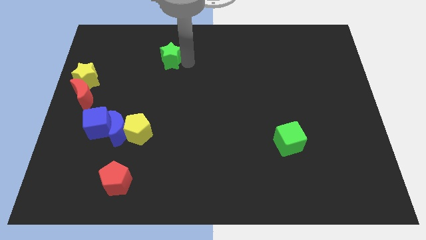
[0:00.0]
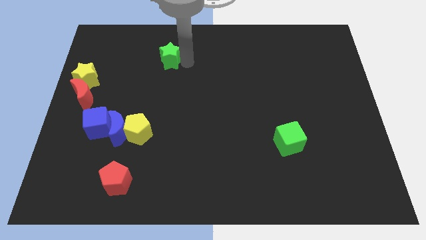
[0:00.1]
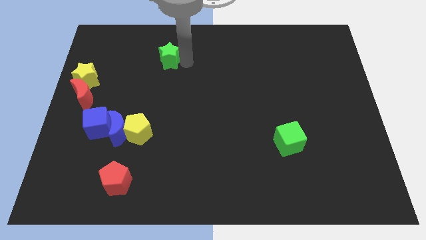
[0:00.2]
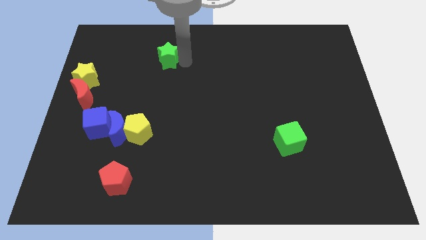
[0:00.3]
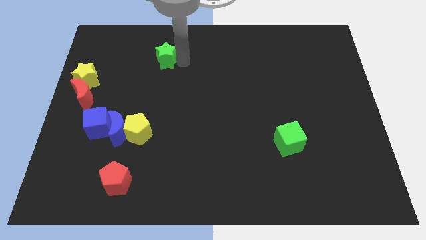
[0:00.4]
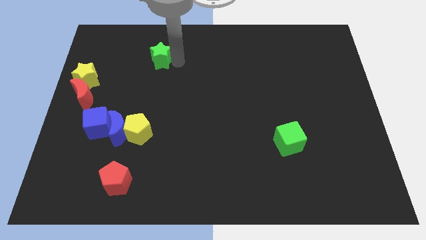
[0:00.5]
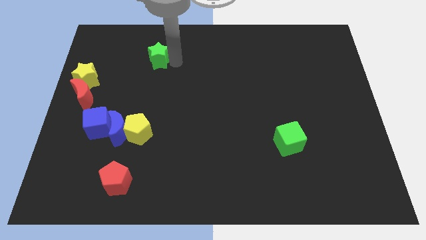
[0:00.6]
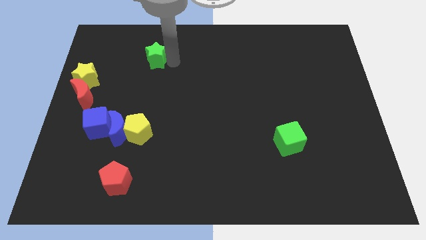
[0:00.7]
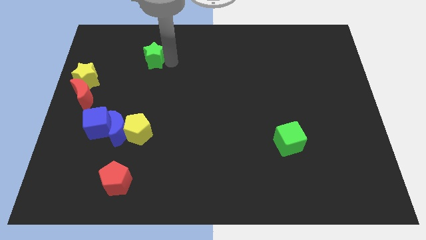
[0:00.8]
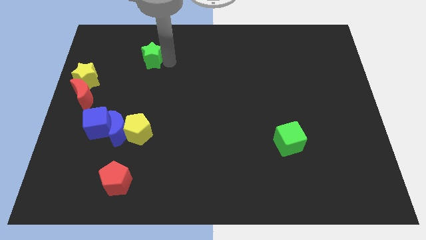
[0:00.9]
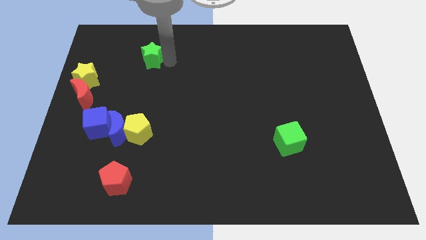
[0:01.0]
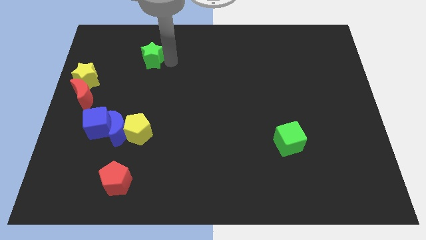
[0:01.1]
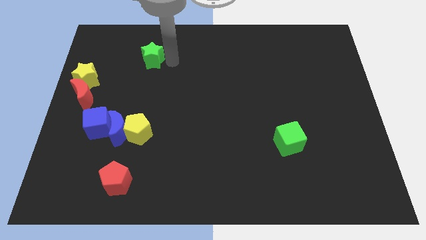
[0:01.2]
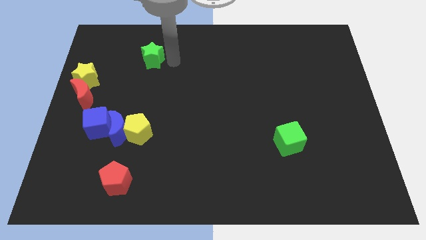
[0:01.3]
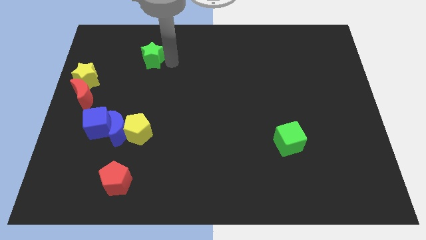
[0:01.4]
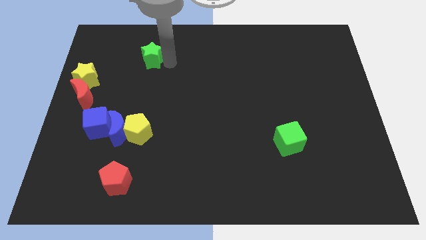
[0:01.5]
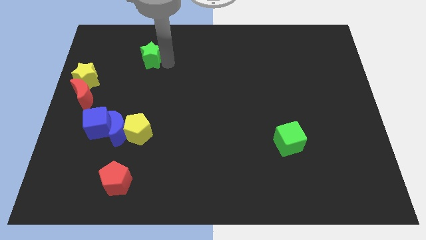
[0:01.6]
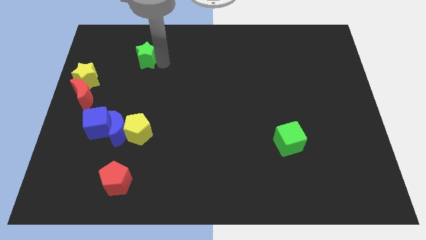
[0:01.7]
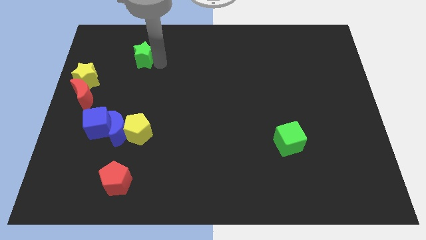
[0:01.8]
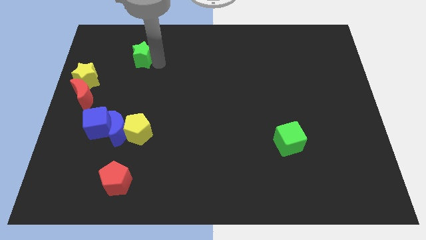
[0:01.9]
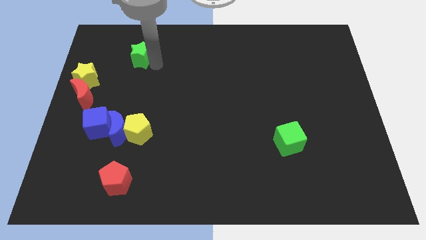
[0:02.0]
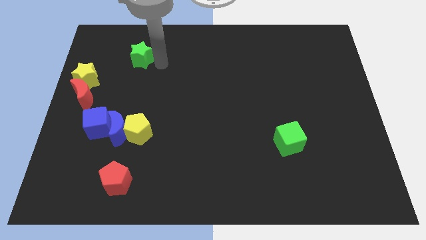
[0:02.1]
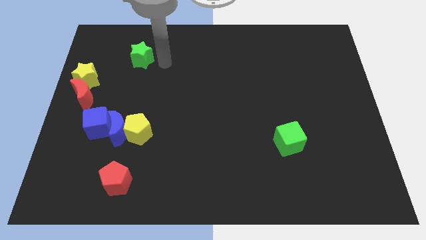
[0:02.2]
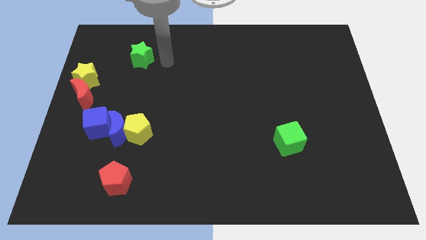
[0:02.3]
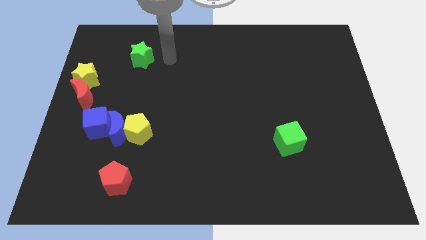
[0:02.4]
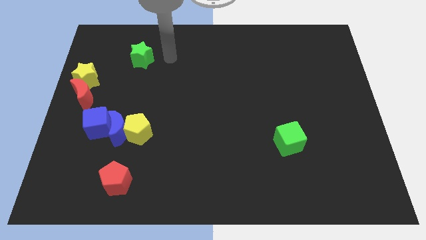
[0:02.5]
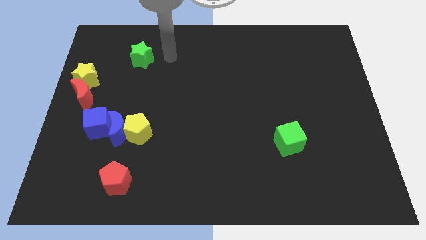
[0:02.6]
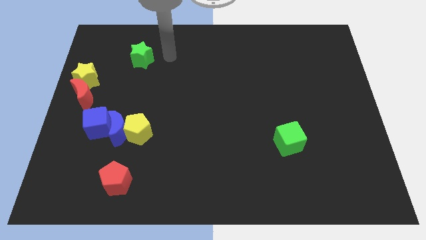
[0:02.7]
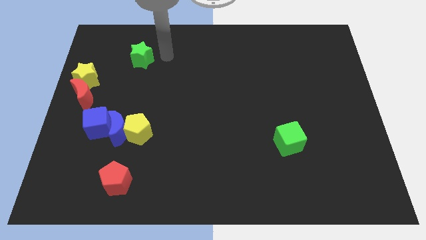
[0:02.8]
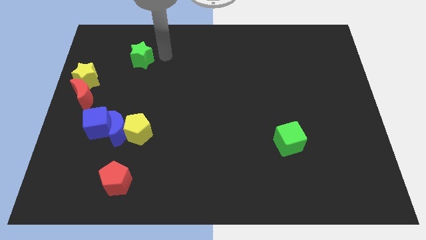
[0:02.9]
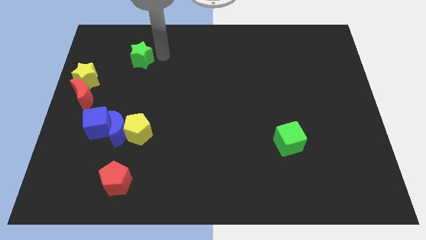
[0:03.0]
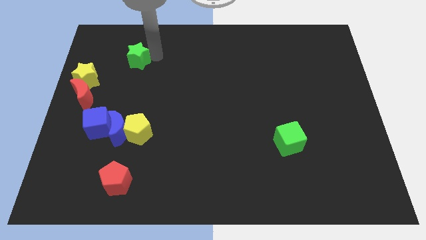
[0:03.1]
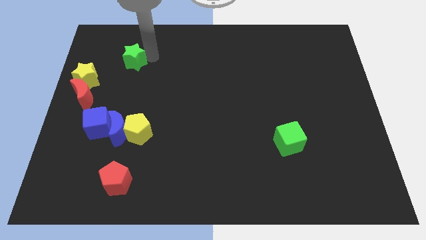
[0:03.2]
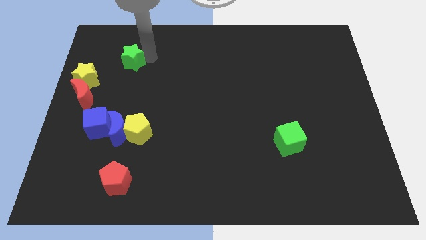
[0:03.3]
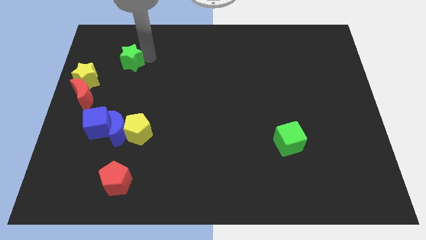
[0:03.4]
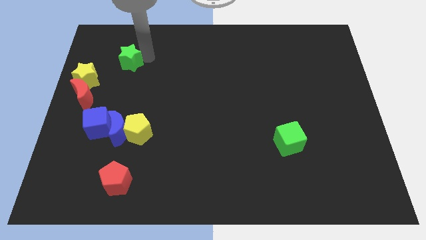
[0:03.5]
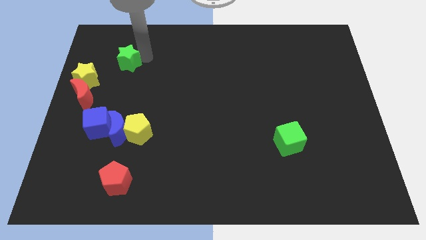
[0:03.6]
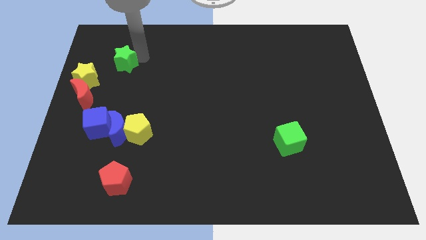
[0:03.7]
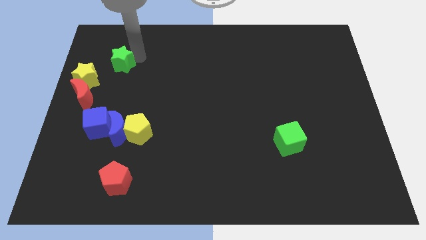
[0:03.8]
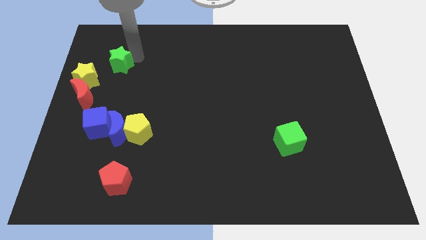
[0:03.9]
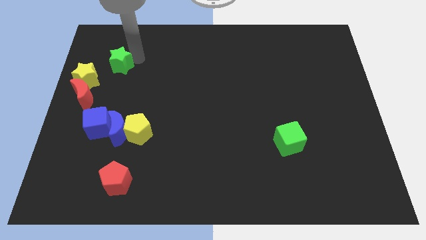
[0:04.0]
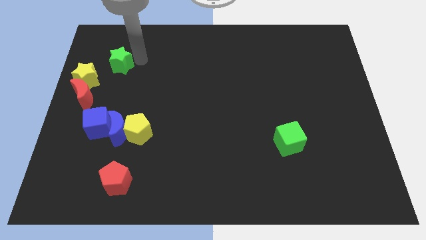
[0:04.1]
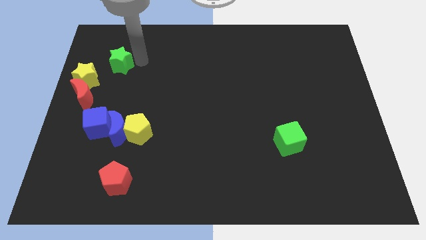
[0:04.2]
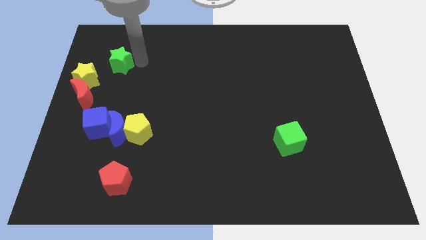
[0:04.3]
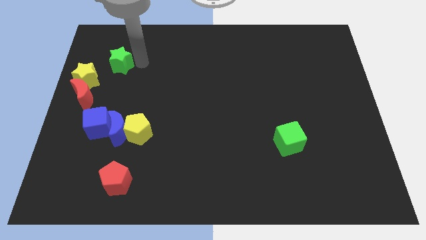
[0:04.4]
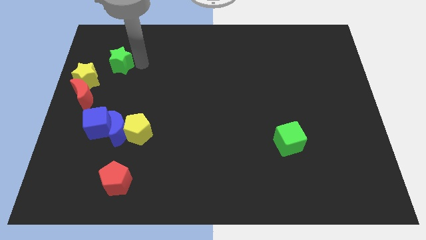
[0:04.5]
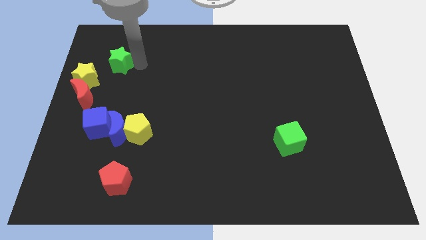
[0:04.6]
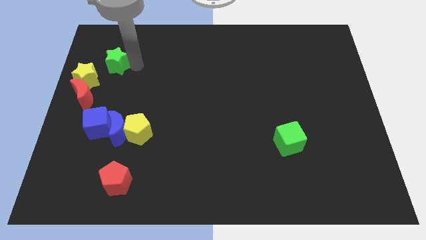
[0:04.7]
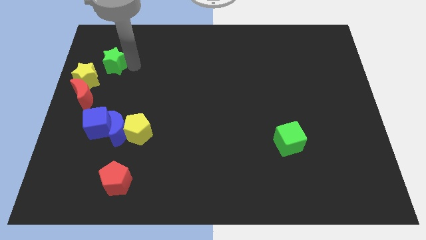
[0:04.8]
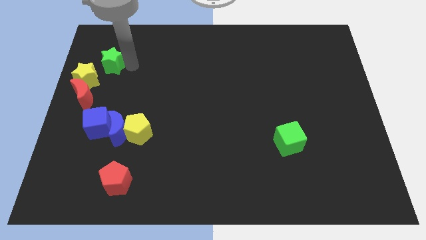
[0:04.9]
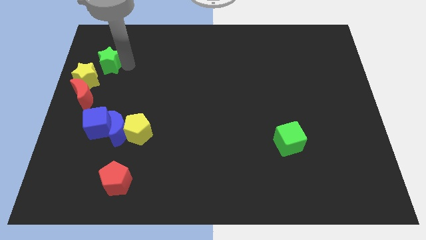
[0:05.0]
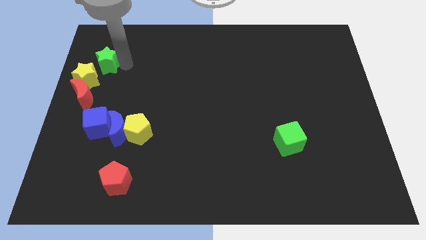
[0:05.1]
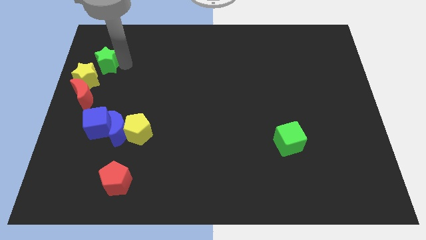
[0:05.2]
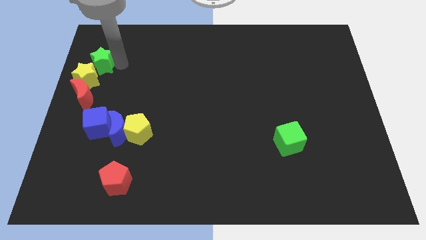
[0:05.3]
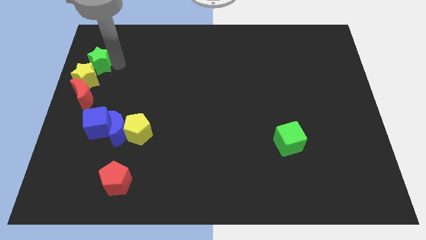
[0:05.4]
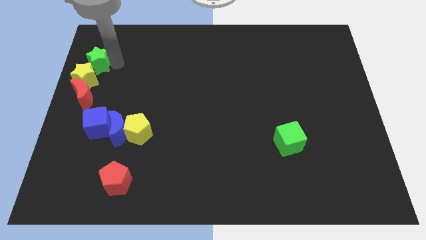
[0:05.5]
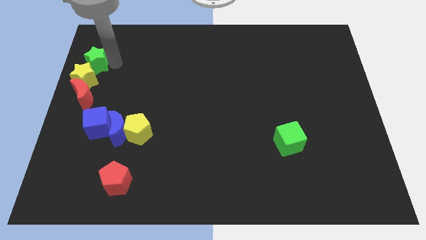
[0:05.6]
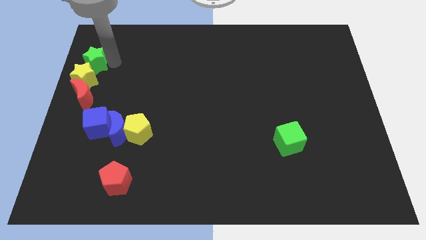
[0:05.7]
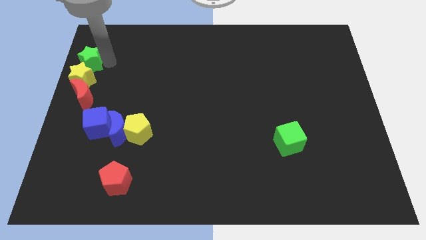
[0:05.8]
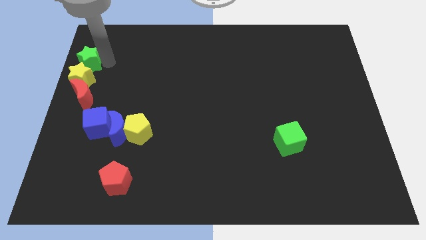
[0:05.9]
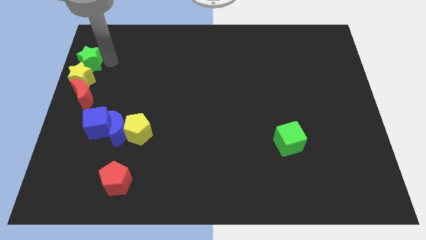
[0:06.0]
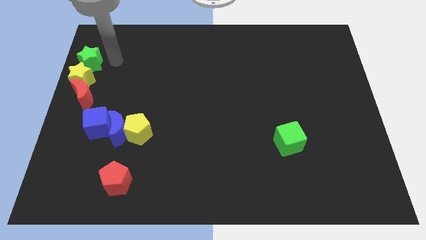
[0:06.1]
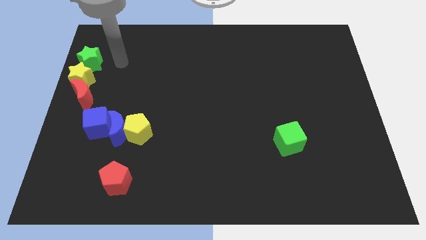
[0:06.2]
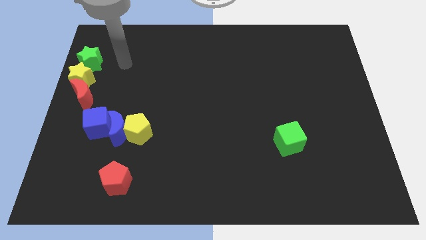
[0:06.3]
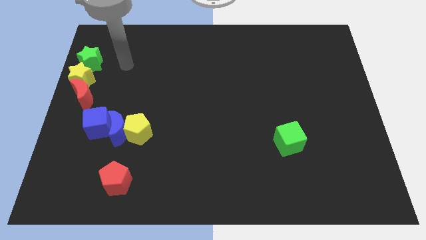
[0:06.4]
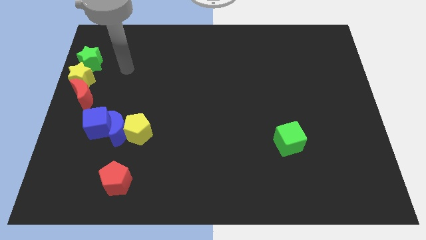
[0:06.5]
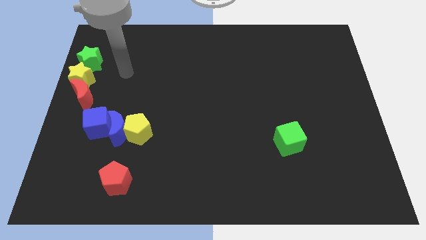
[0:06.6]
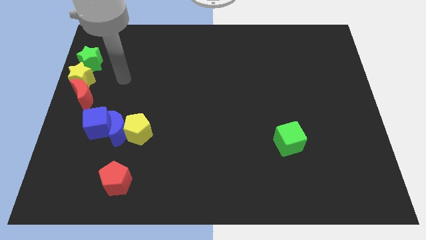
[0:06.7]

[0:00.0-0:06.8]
place the green star to the top of the yellow star

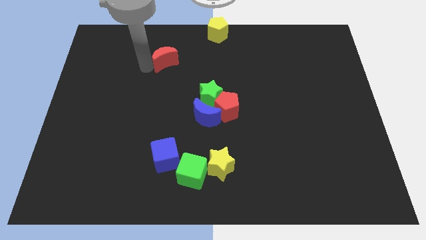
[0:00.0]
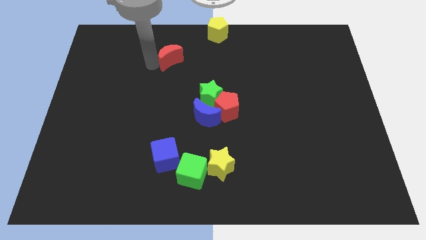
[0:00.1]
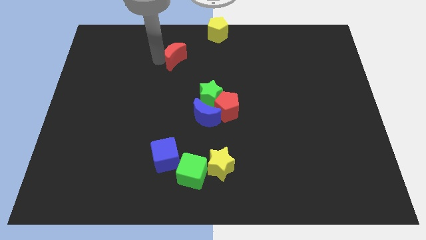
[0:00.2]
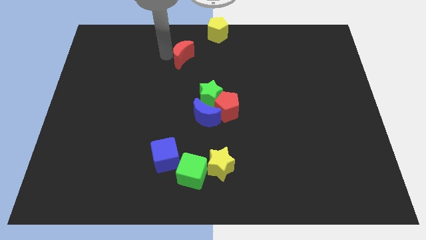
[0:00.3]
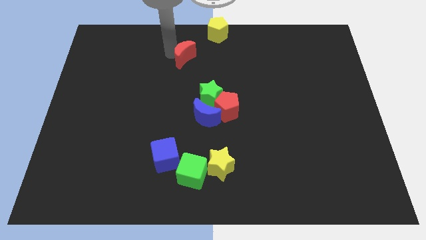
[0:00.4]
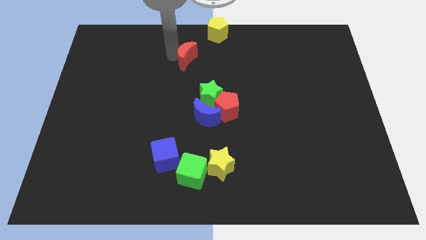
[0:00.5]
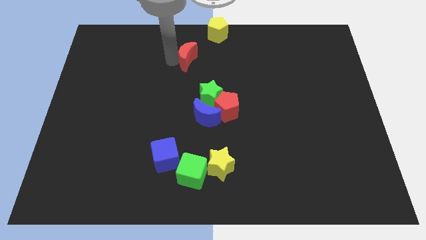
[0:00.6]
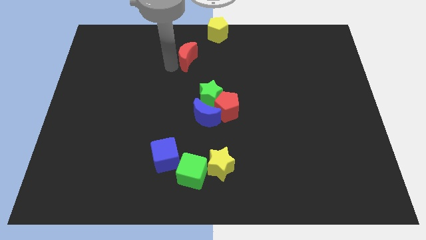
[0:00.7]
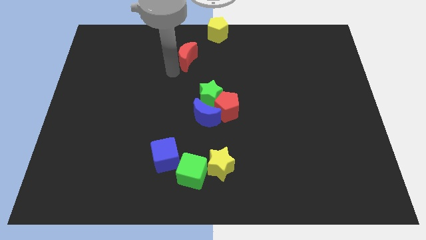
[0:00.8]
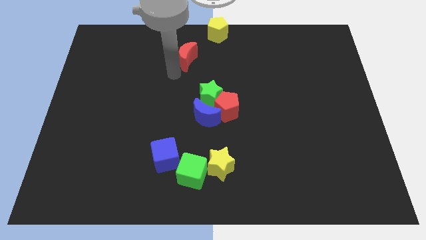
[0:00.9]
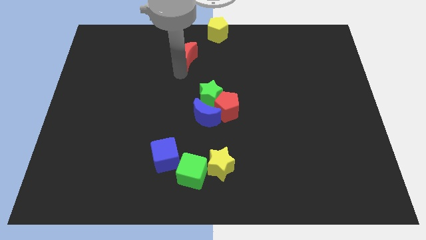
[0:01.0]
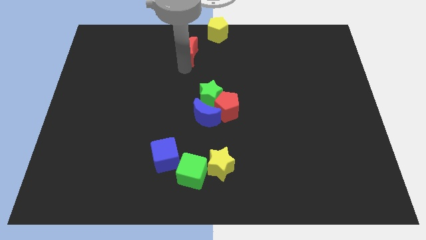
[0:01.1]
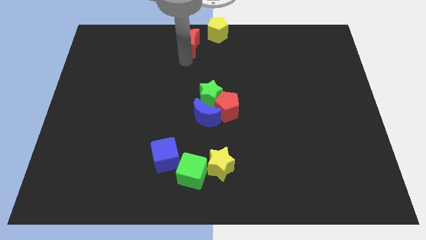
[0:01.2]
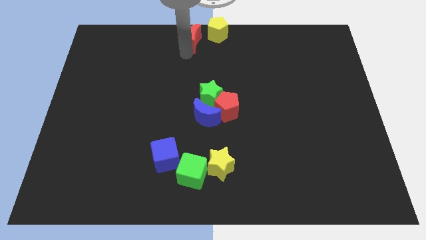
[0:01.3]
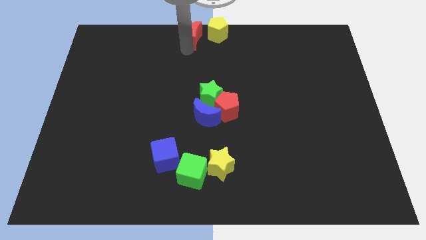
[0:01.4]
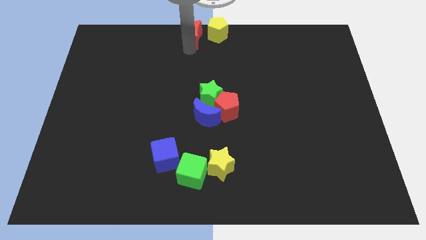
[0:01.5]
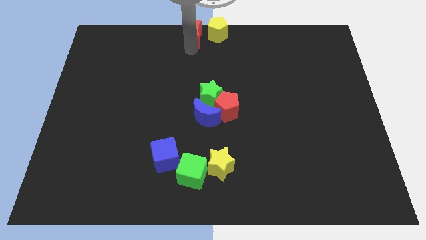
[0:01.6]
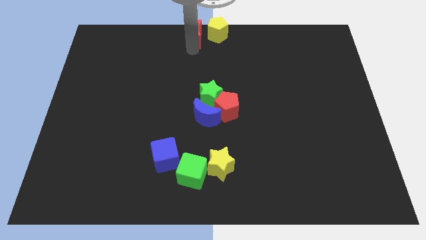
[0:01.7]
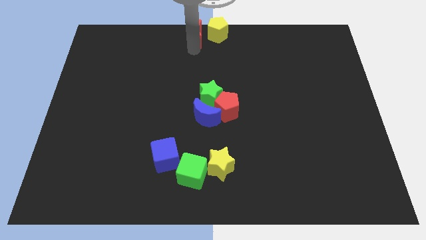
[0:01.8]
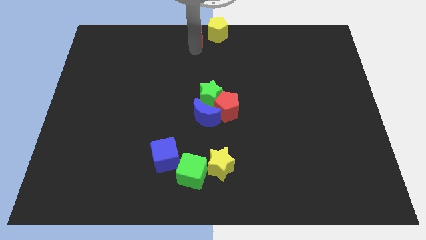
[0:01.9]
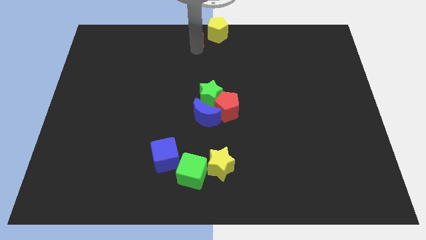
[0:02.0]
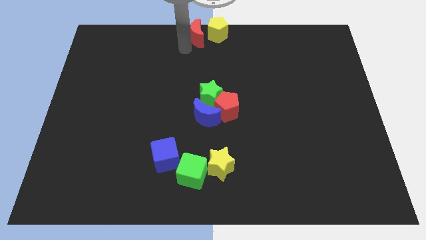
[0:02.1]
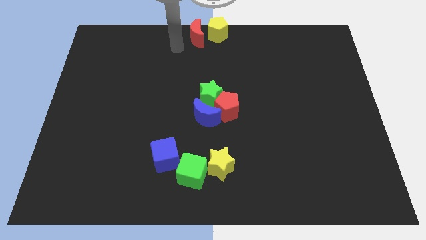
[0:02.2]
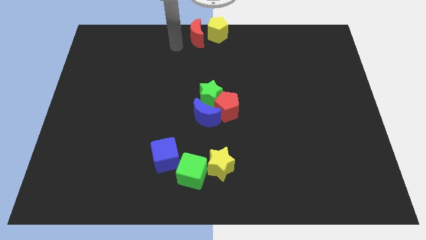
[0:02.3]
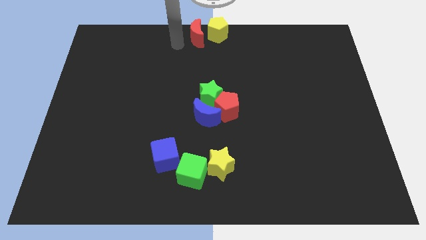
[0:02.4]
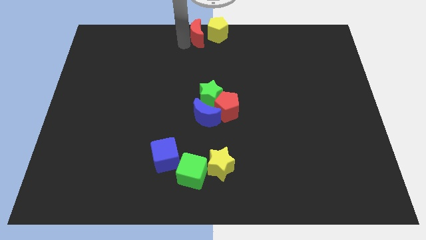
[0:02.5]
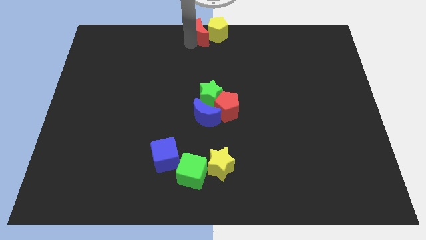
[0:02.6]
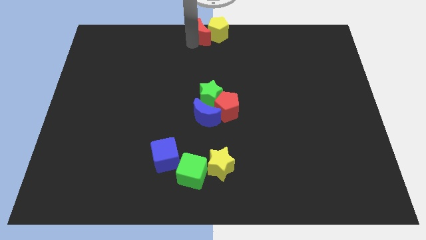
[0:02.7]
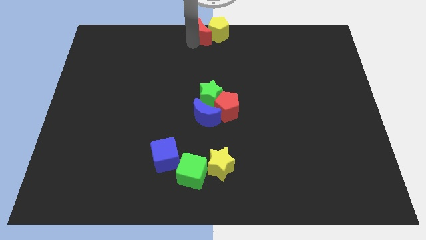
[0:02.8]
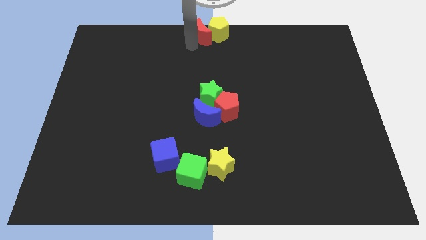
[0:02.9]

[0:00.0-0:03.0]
place red moon left to yellow pentagon
